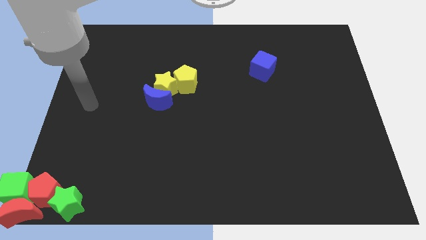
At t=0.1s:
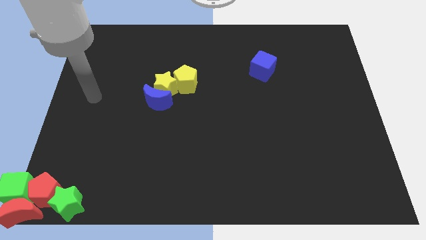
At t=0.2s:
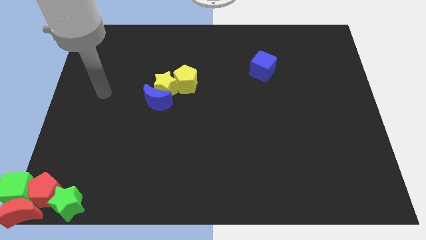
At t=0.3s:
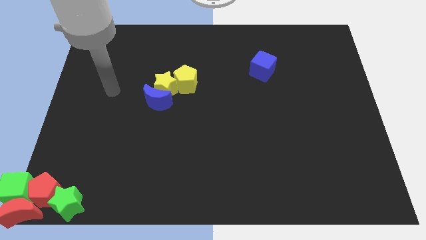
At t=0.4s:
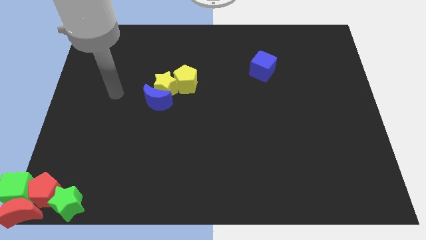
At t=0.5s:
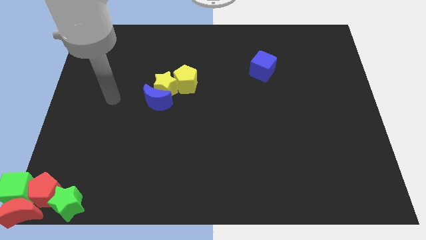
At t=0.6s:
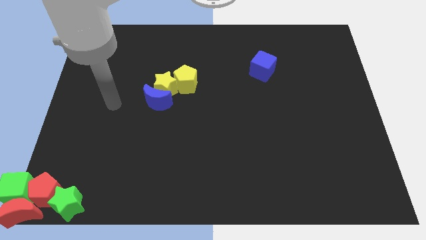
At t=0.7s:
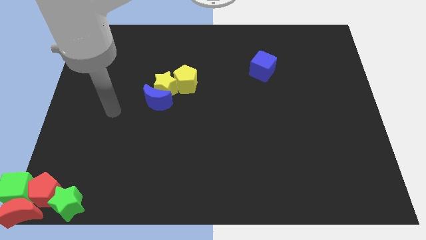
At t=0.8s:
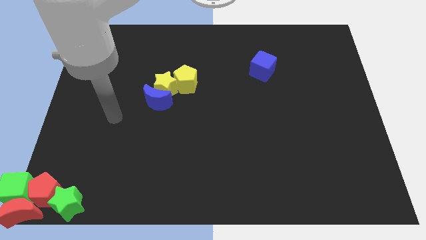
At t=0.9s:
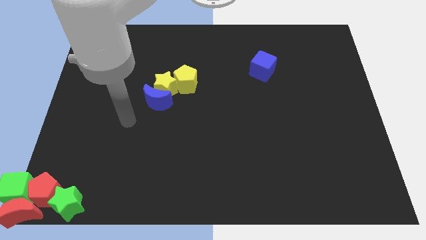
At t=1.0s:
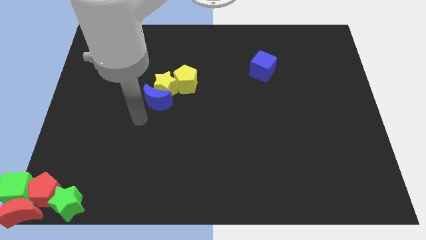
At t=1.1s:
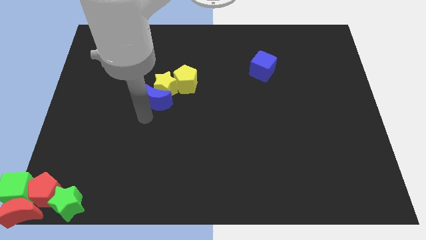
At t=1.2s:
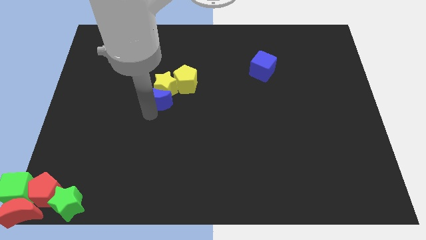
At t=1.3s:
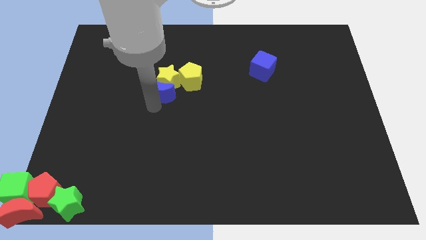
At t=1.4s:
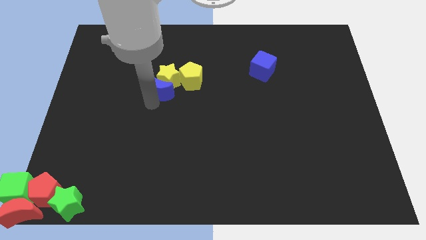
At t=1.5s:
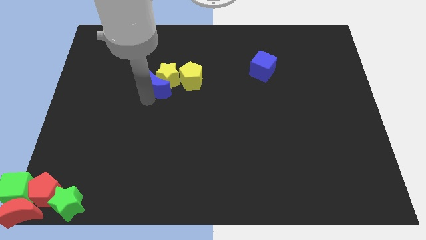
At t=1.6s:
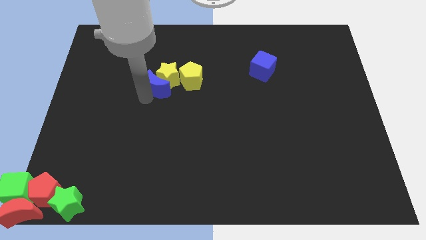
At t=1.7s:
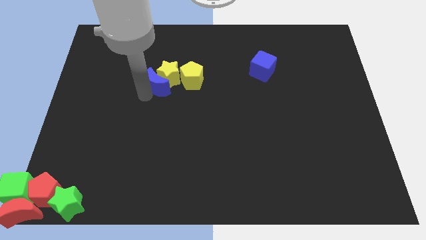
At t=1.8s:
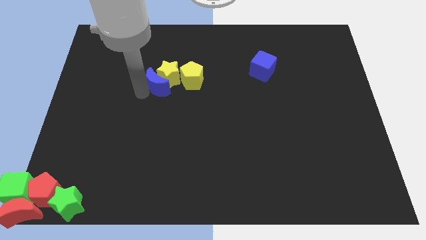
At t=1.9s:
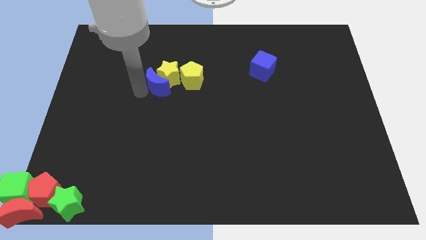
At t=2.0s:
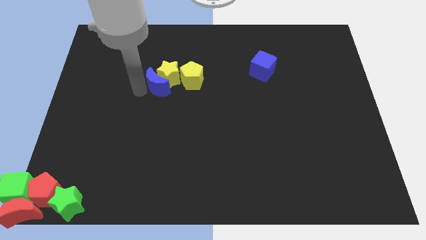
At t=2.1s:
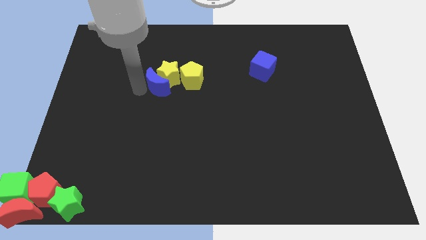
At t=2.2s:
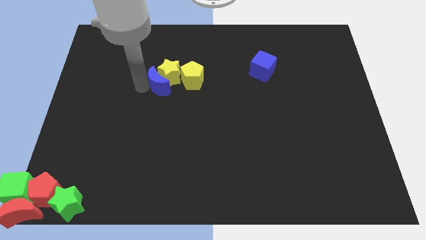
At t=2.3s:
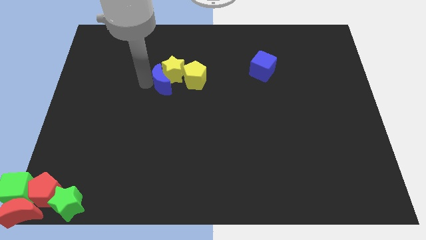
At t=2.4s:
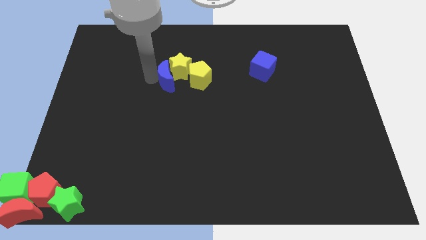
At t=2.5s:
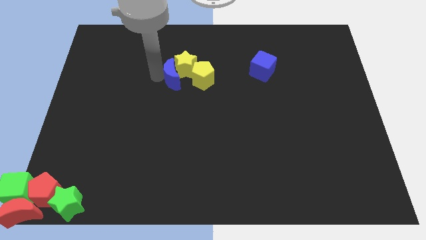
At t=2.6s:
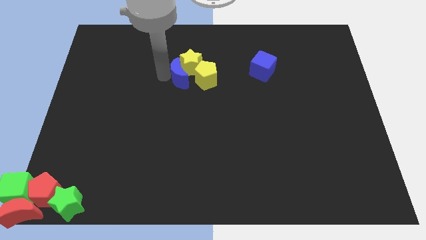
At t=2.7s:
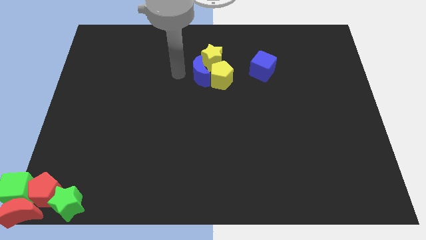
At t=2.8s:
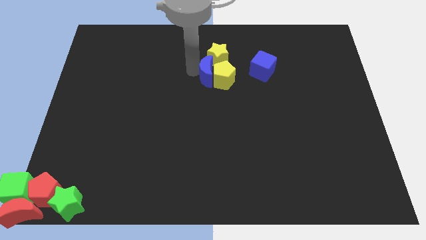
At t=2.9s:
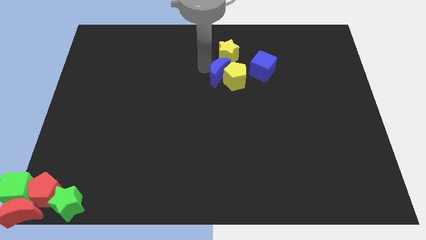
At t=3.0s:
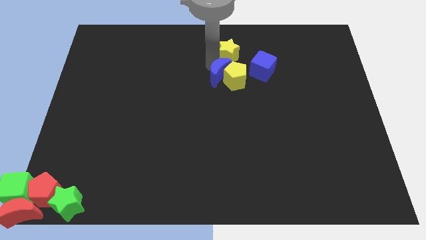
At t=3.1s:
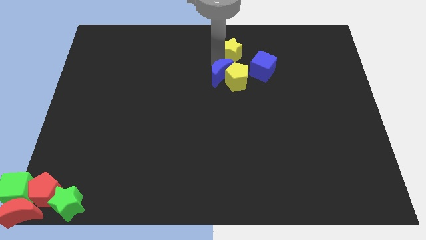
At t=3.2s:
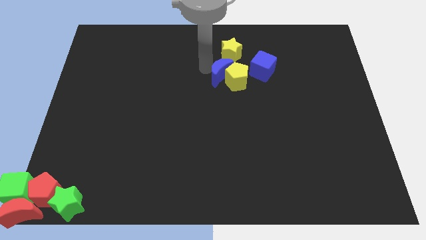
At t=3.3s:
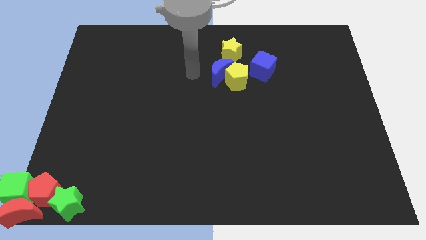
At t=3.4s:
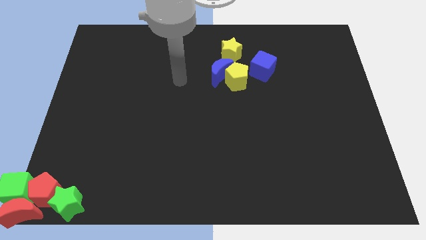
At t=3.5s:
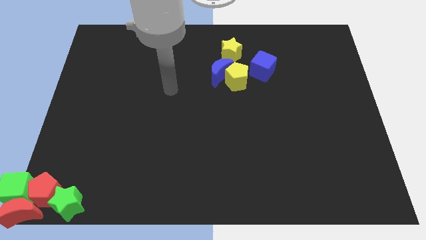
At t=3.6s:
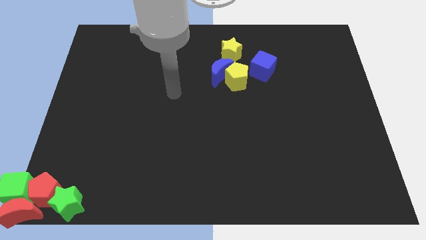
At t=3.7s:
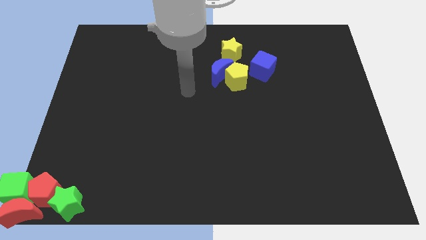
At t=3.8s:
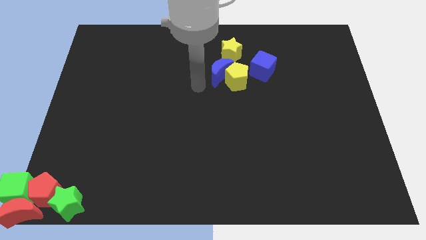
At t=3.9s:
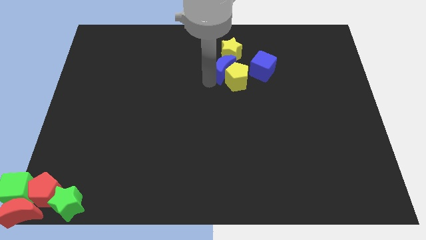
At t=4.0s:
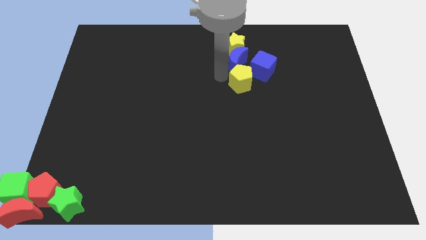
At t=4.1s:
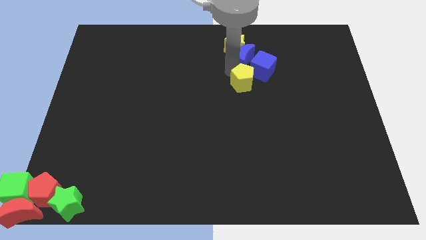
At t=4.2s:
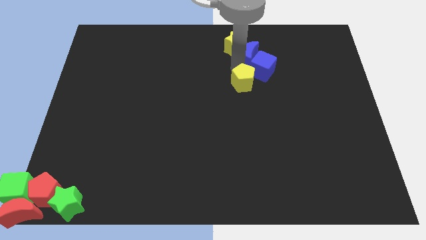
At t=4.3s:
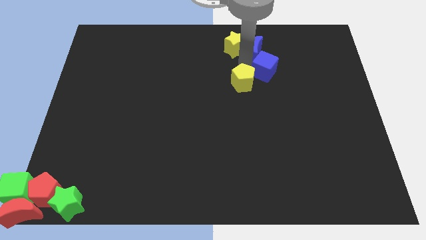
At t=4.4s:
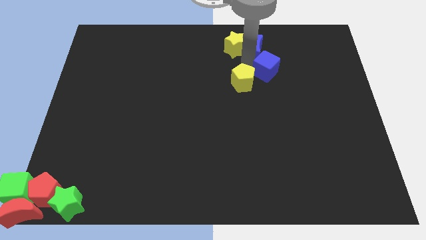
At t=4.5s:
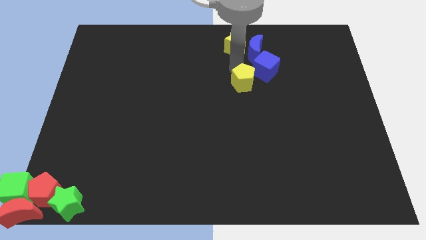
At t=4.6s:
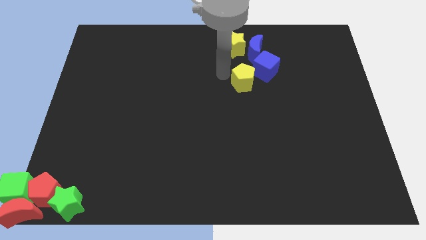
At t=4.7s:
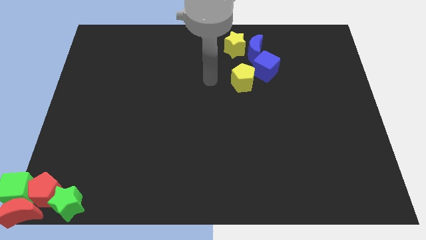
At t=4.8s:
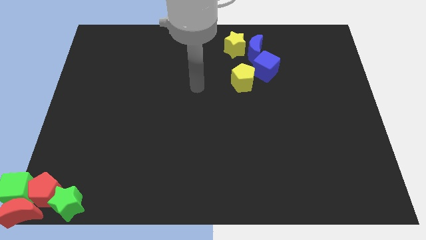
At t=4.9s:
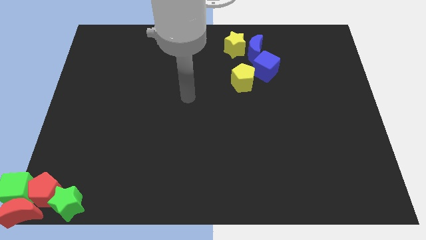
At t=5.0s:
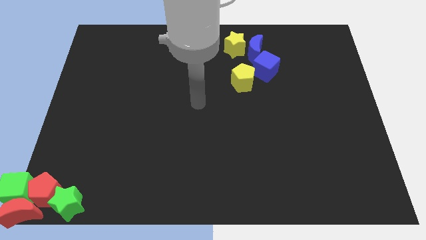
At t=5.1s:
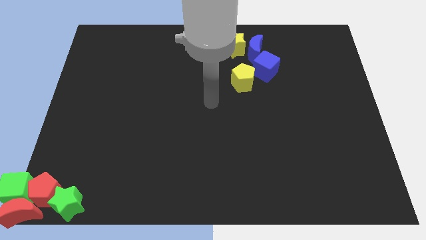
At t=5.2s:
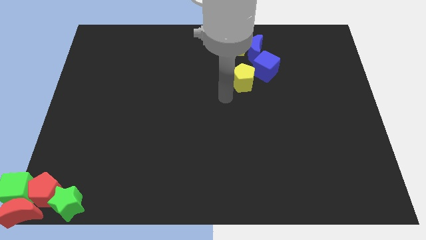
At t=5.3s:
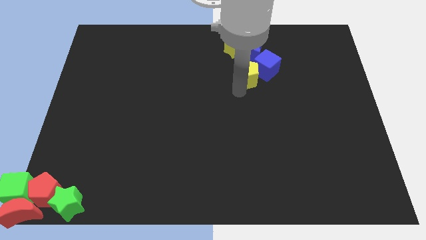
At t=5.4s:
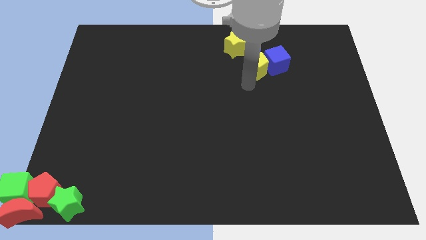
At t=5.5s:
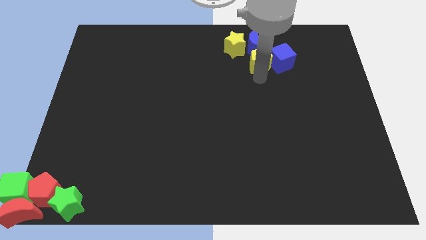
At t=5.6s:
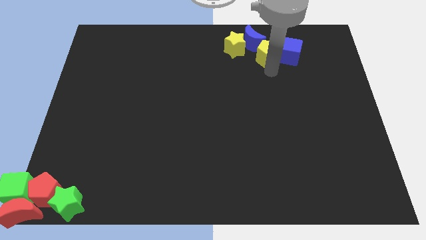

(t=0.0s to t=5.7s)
drag the blue crescentyellow staryellow pentagon towards blue cube

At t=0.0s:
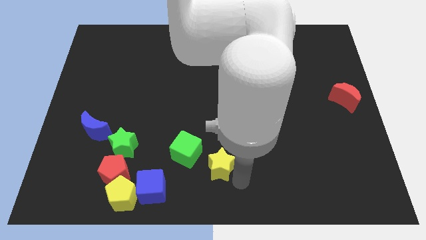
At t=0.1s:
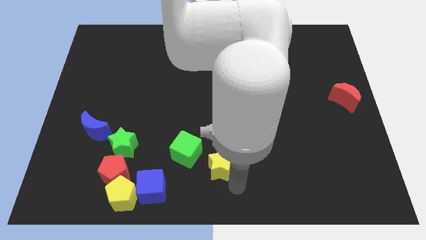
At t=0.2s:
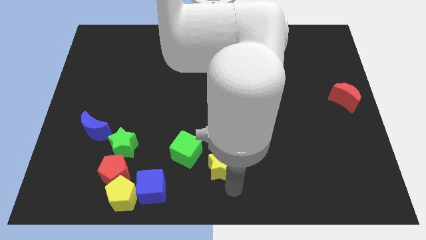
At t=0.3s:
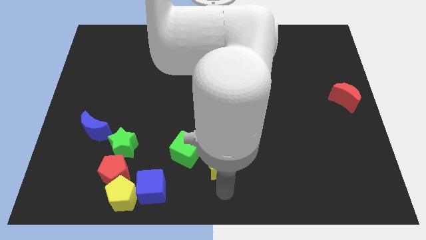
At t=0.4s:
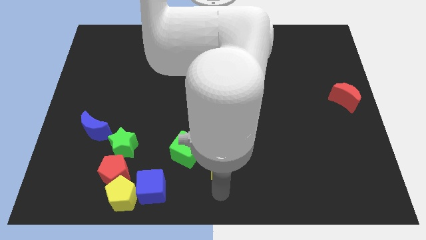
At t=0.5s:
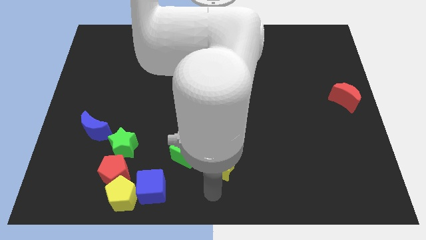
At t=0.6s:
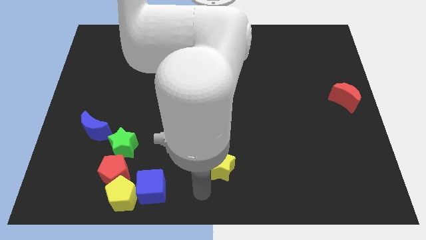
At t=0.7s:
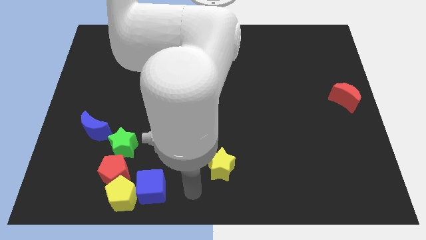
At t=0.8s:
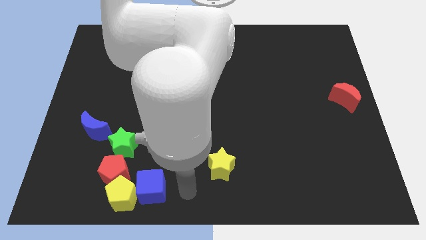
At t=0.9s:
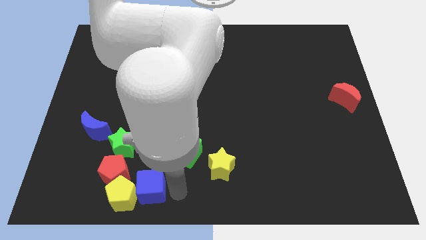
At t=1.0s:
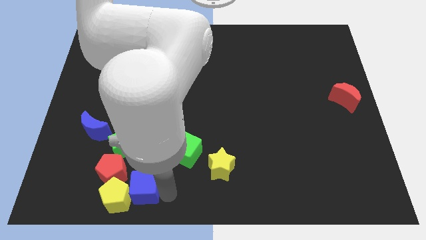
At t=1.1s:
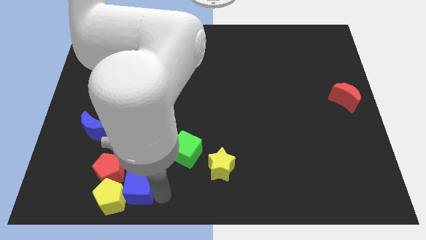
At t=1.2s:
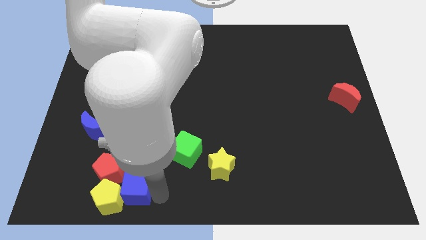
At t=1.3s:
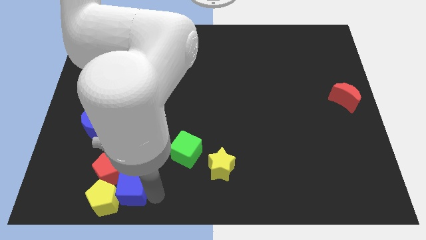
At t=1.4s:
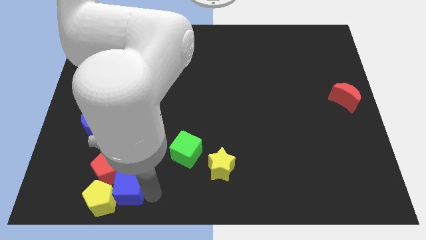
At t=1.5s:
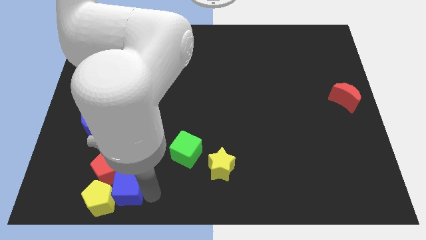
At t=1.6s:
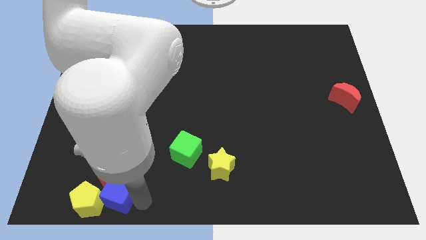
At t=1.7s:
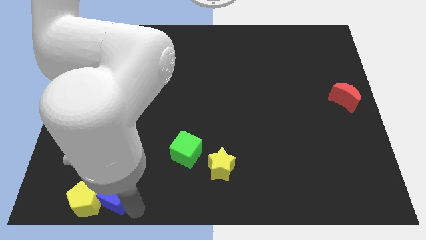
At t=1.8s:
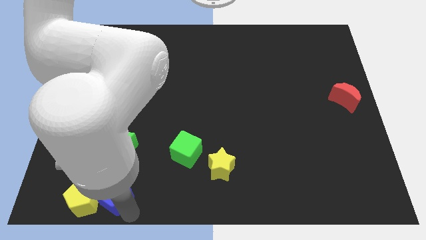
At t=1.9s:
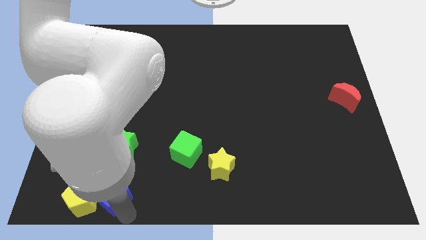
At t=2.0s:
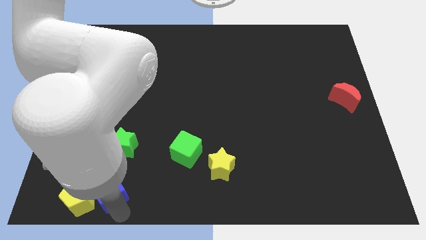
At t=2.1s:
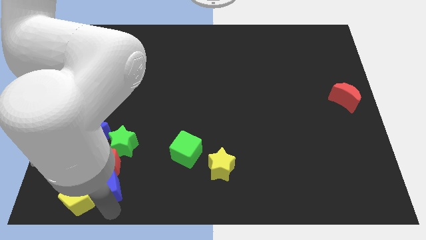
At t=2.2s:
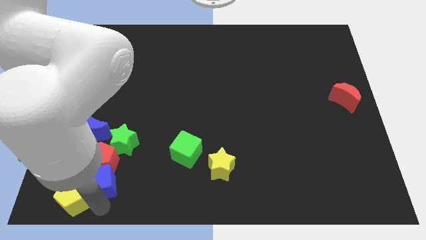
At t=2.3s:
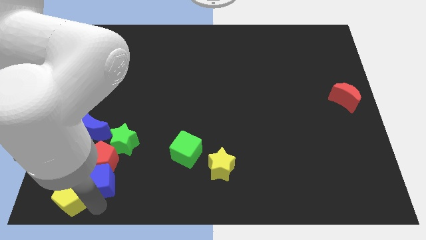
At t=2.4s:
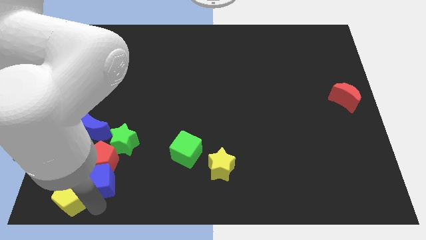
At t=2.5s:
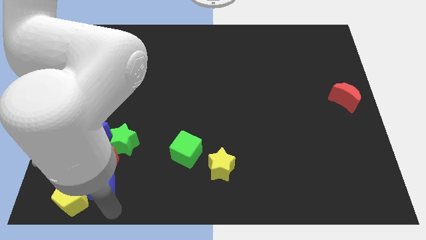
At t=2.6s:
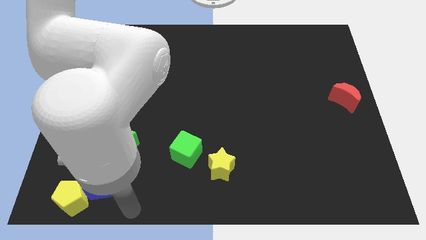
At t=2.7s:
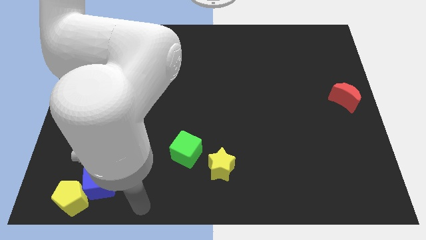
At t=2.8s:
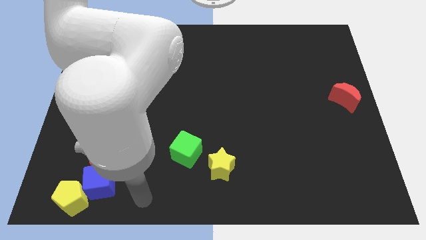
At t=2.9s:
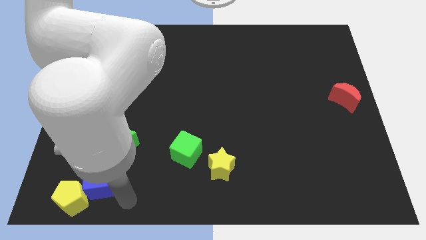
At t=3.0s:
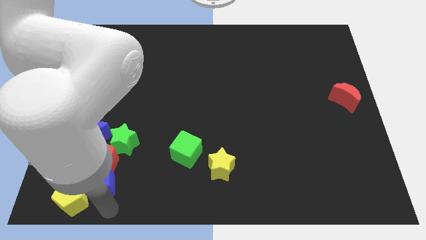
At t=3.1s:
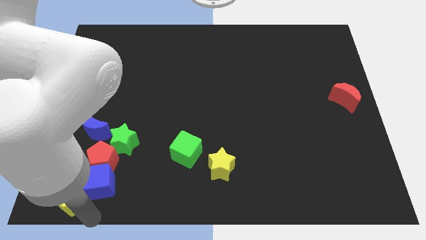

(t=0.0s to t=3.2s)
move blue cube into red pentagon

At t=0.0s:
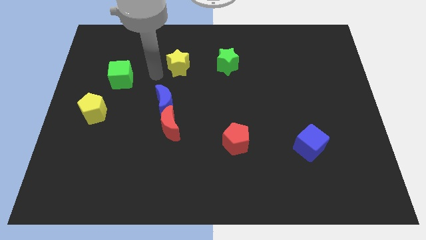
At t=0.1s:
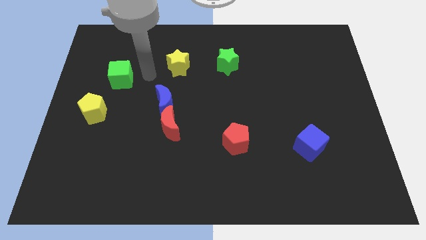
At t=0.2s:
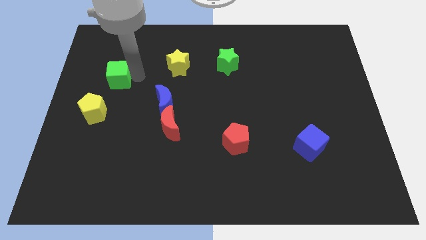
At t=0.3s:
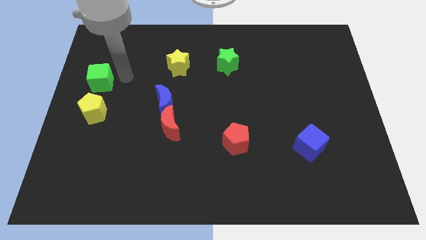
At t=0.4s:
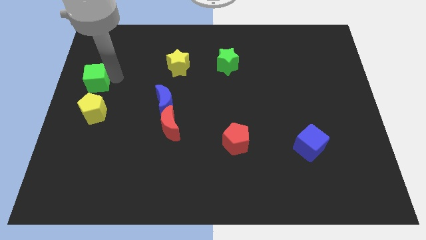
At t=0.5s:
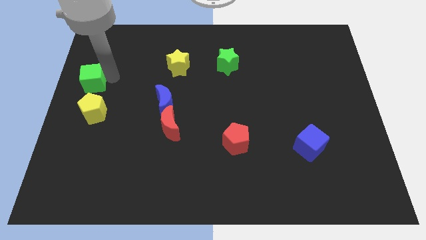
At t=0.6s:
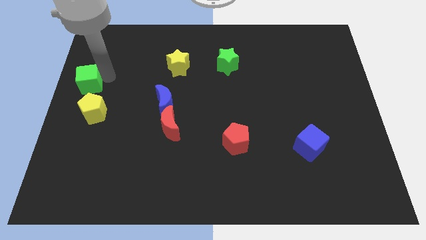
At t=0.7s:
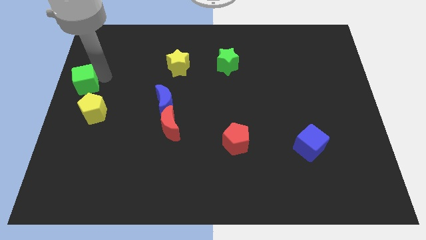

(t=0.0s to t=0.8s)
place green cube diagonally above yellow pentagon
